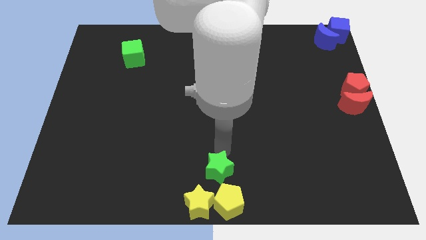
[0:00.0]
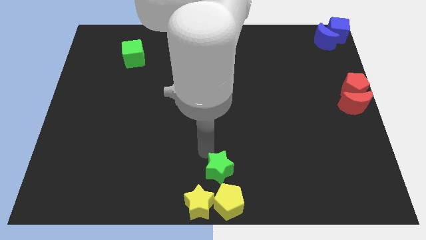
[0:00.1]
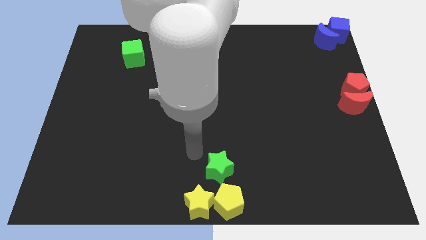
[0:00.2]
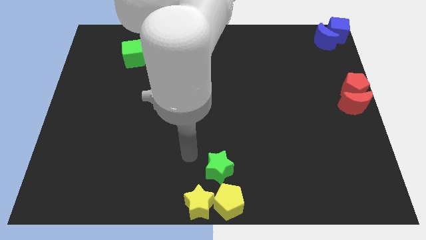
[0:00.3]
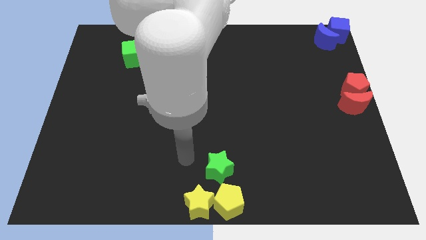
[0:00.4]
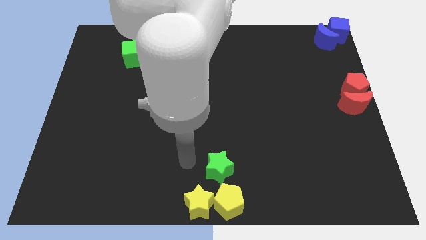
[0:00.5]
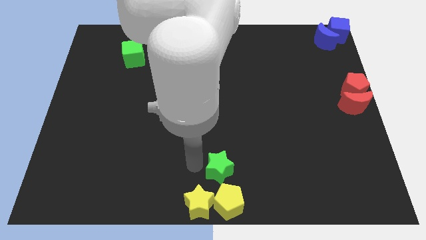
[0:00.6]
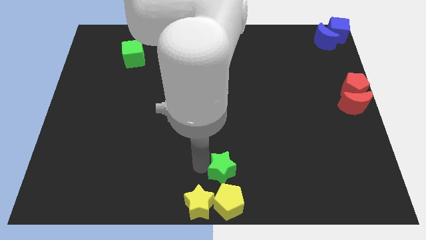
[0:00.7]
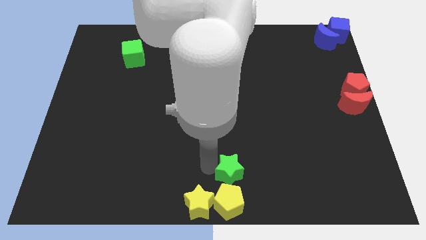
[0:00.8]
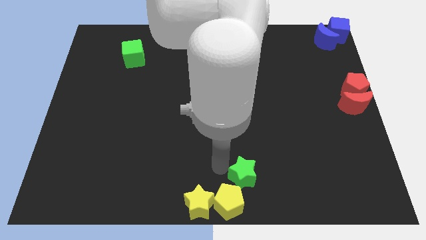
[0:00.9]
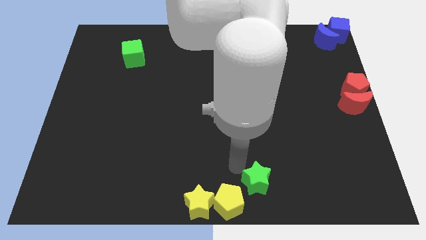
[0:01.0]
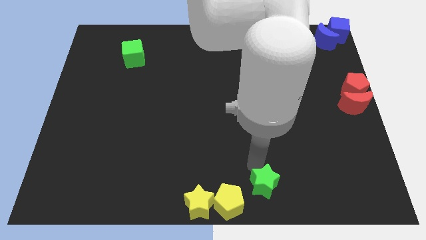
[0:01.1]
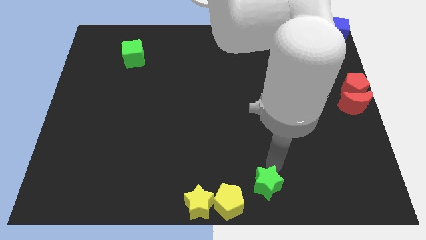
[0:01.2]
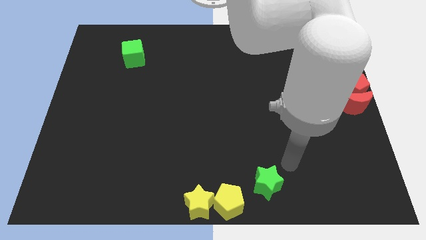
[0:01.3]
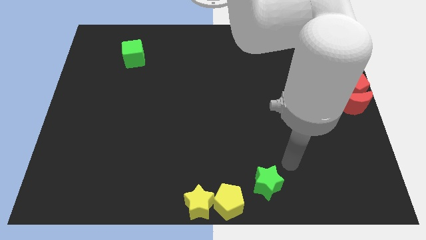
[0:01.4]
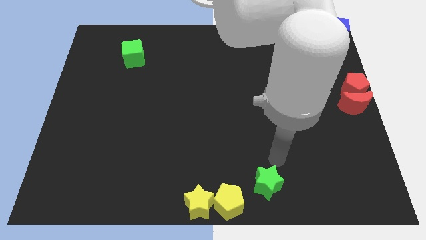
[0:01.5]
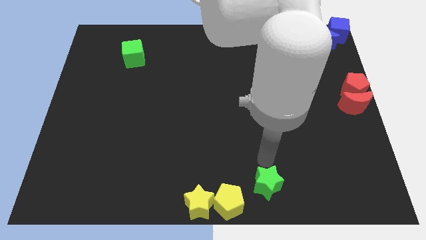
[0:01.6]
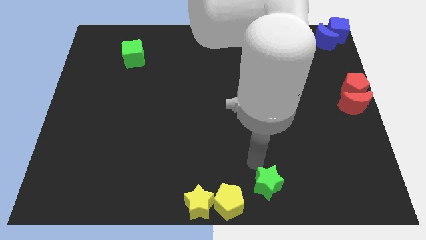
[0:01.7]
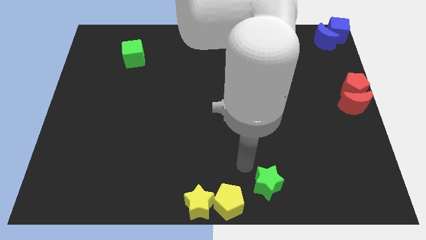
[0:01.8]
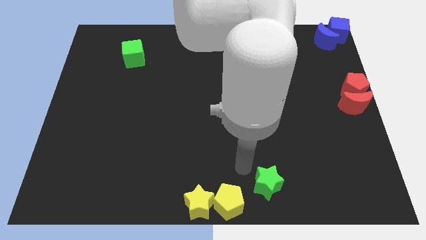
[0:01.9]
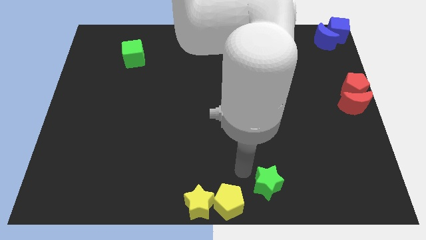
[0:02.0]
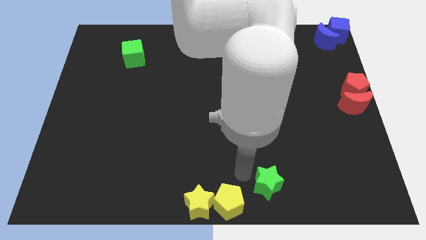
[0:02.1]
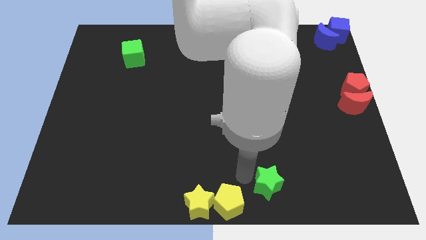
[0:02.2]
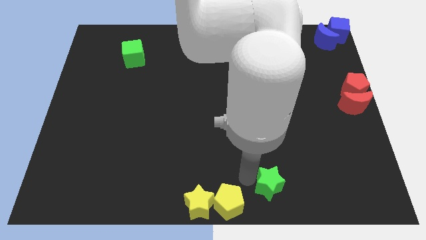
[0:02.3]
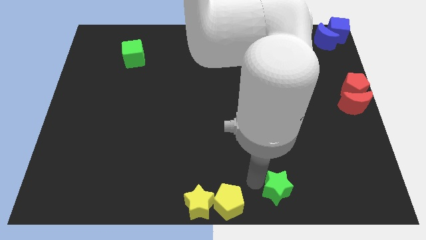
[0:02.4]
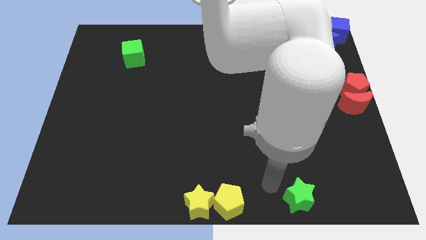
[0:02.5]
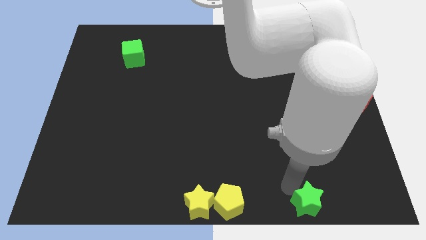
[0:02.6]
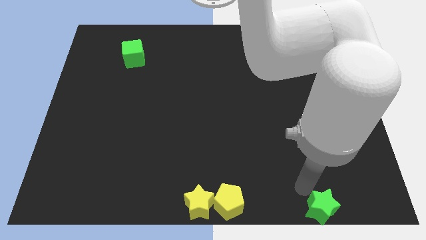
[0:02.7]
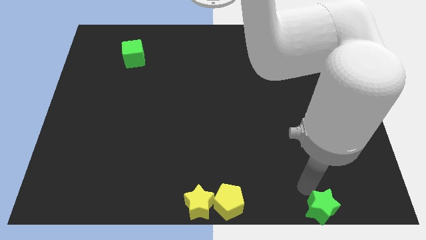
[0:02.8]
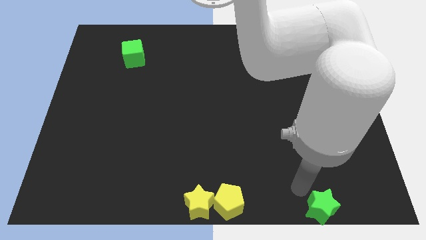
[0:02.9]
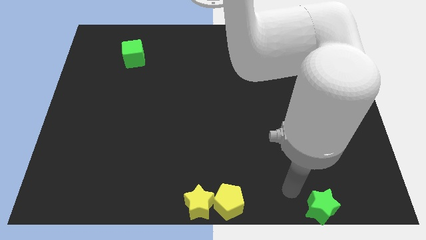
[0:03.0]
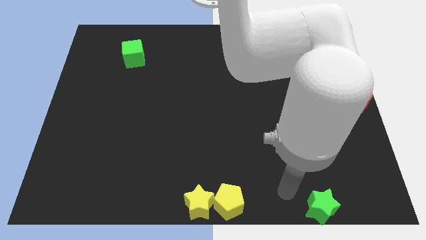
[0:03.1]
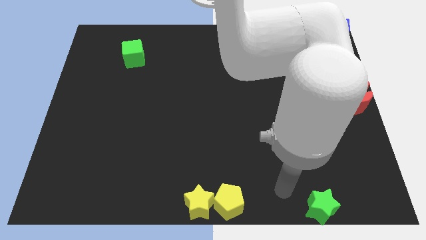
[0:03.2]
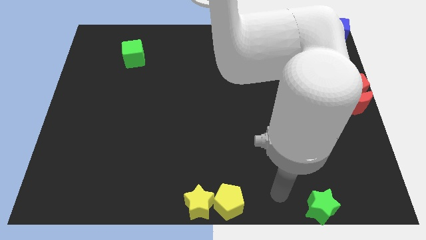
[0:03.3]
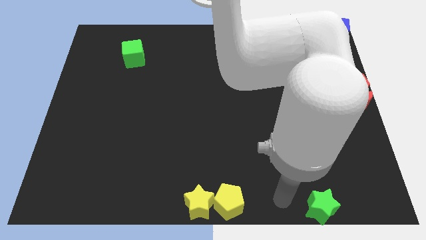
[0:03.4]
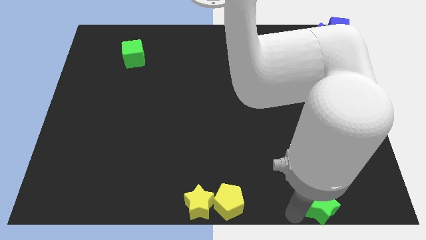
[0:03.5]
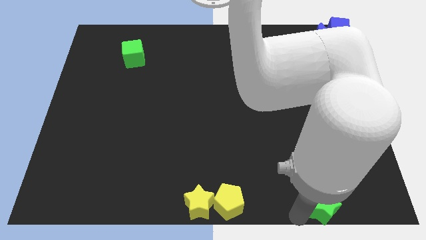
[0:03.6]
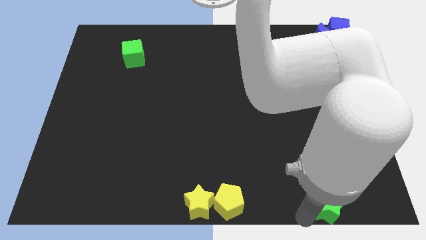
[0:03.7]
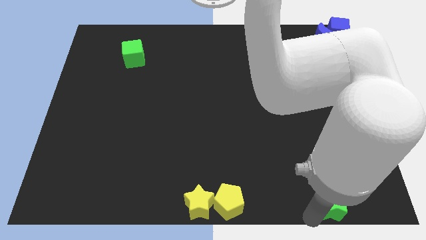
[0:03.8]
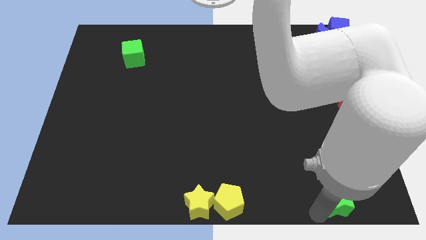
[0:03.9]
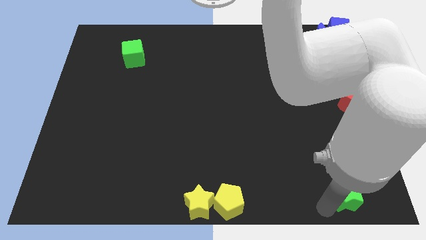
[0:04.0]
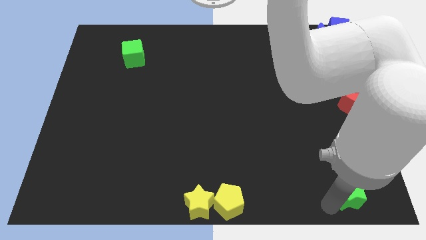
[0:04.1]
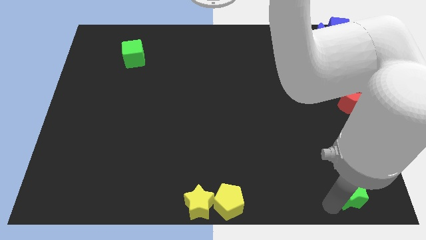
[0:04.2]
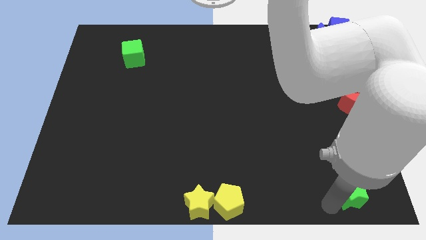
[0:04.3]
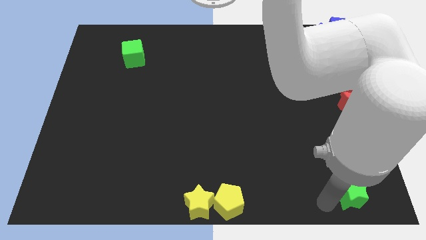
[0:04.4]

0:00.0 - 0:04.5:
push the green star to the bottom right of the board

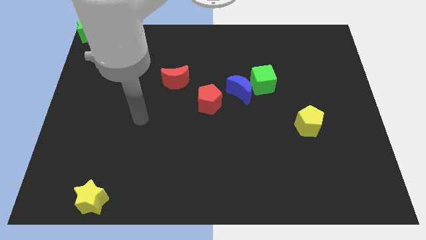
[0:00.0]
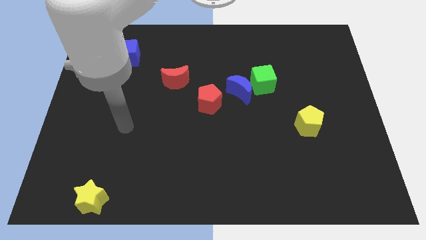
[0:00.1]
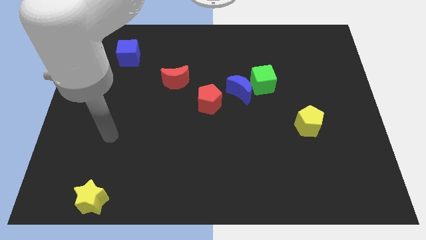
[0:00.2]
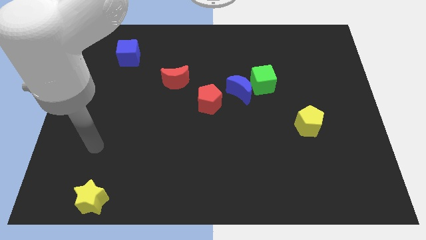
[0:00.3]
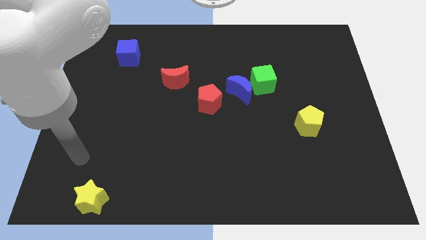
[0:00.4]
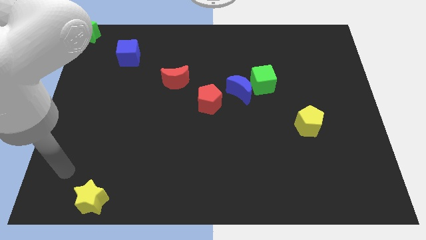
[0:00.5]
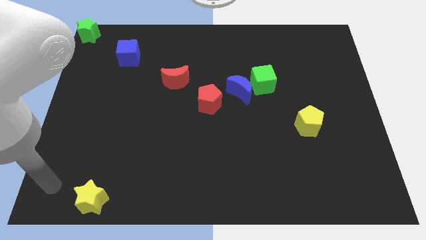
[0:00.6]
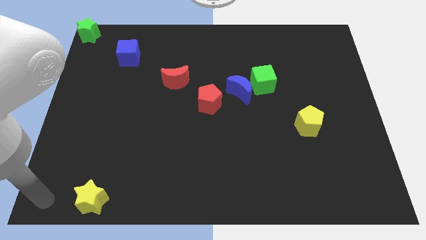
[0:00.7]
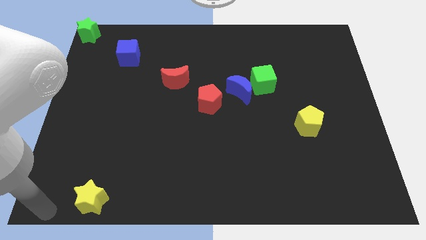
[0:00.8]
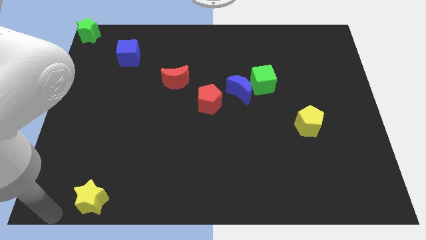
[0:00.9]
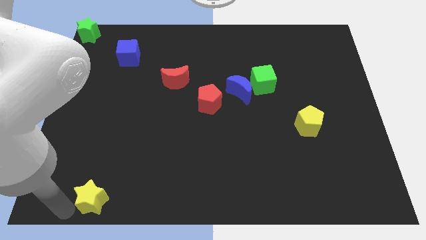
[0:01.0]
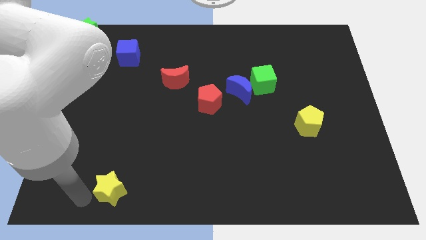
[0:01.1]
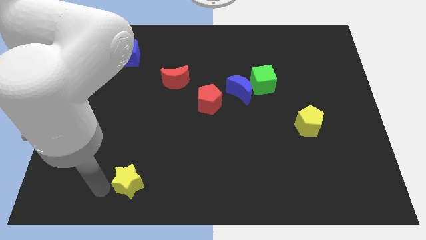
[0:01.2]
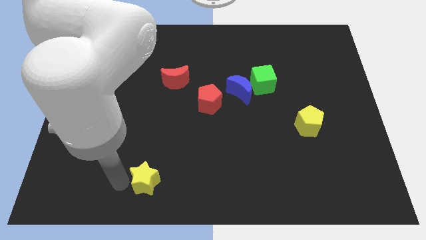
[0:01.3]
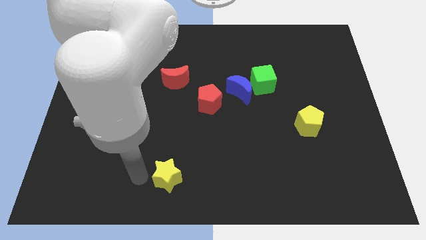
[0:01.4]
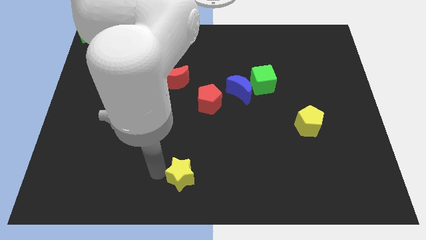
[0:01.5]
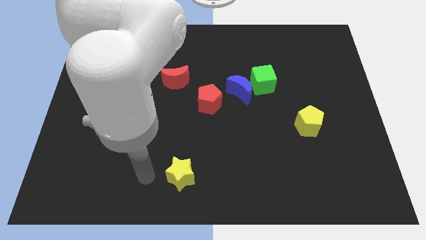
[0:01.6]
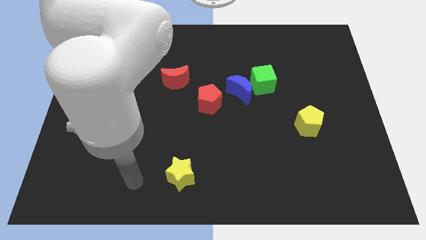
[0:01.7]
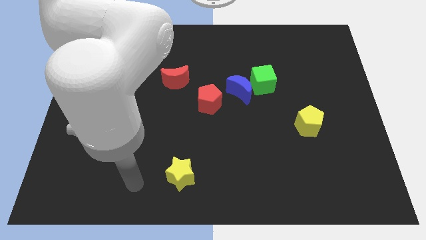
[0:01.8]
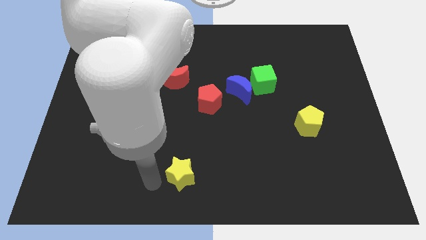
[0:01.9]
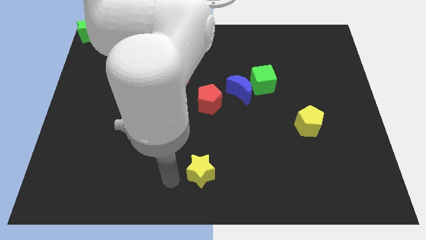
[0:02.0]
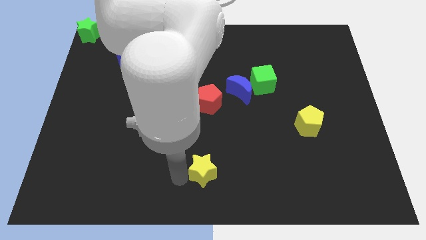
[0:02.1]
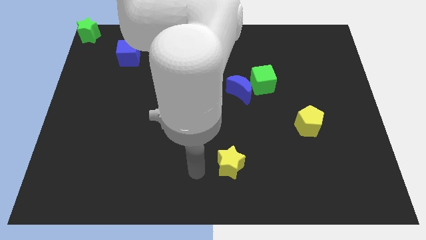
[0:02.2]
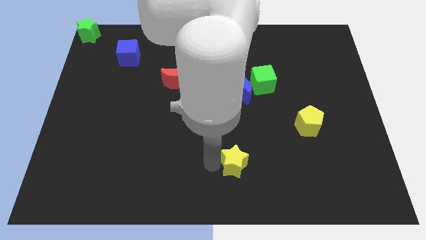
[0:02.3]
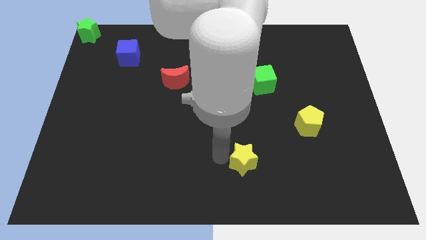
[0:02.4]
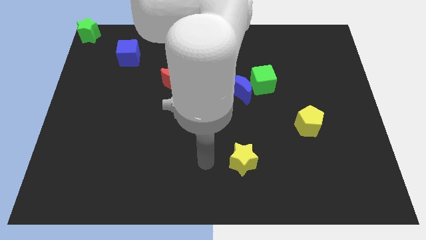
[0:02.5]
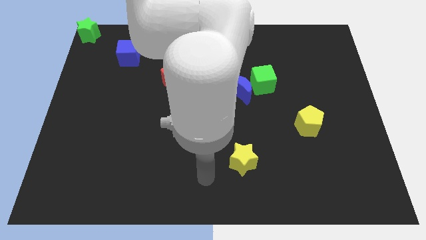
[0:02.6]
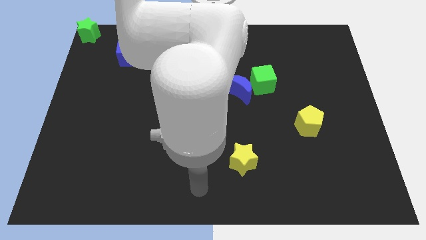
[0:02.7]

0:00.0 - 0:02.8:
place the yellow star below the red pentagon

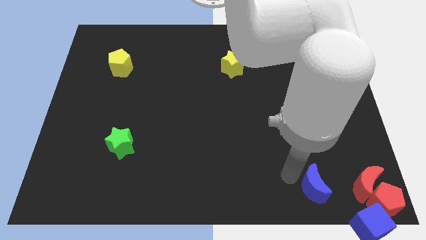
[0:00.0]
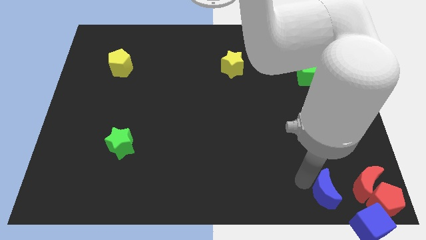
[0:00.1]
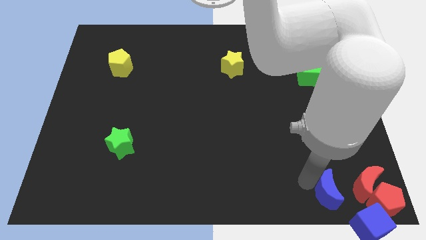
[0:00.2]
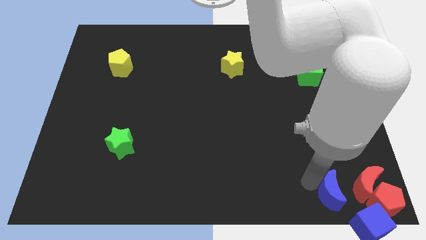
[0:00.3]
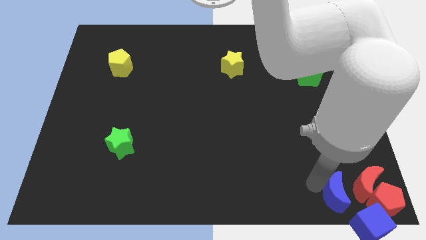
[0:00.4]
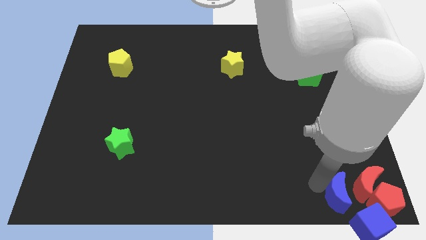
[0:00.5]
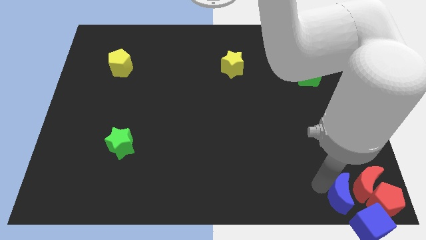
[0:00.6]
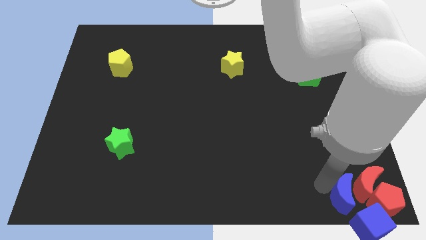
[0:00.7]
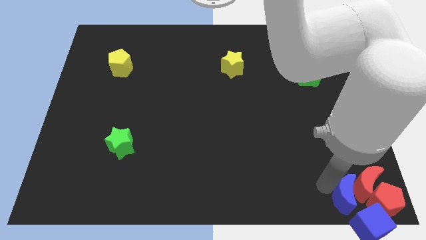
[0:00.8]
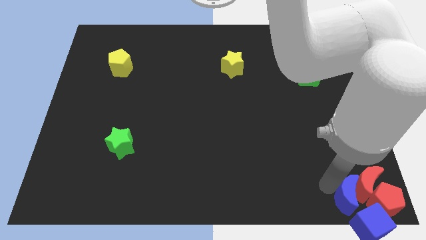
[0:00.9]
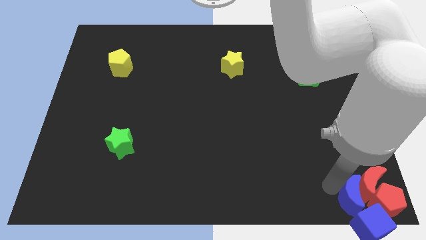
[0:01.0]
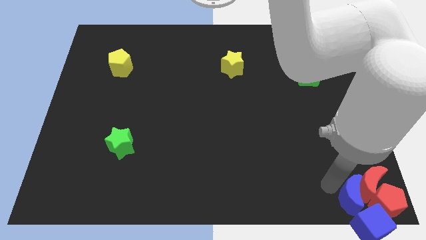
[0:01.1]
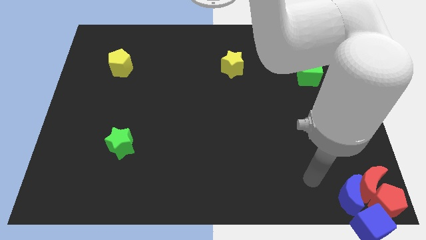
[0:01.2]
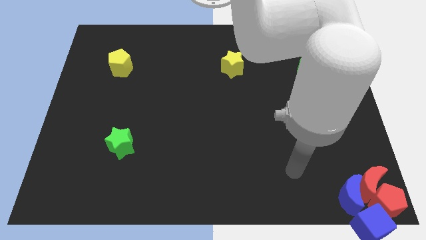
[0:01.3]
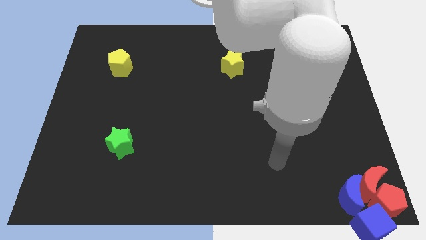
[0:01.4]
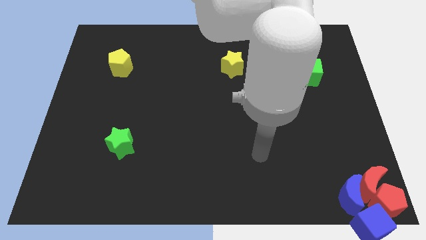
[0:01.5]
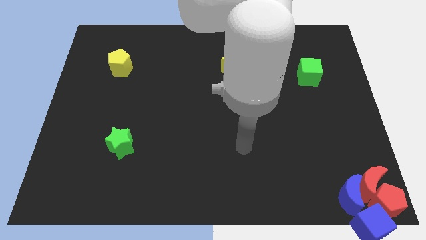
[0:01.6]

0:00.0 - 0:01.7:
push the blue moon into the red moon

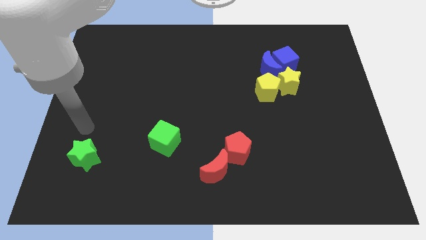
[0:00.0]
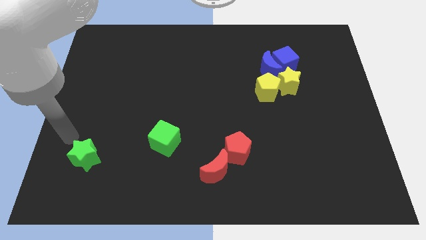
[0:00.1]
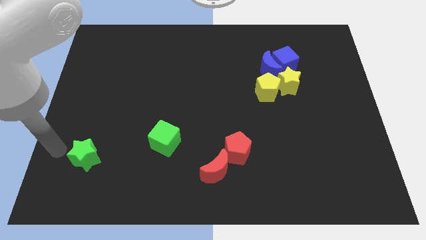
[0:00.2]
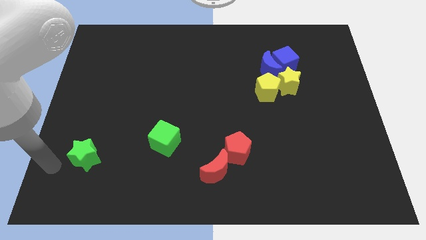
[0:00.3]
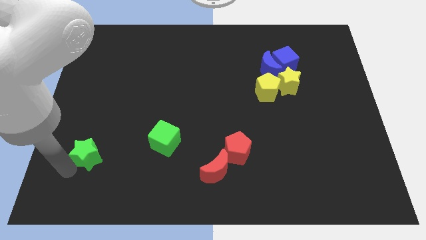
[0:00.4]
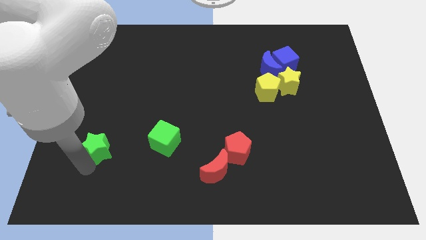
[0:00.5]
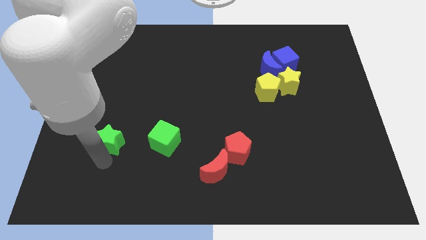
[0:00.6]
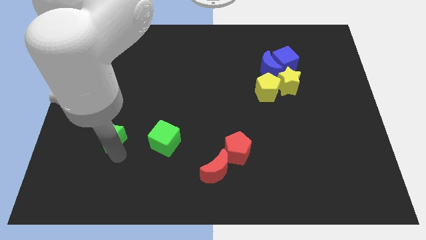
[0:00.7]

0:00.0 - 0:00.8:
put the green star left to the green cube
